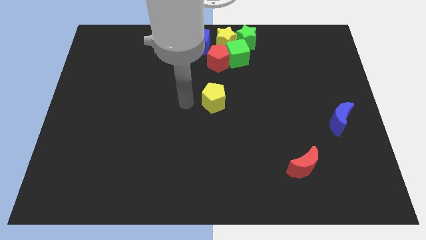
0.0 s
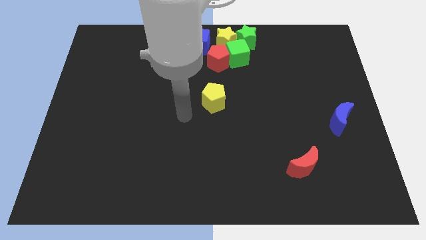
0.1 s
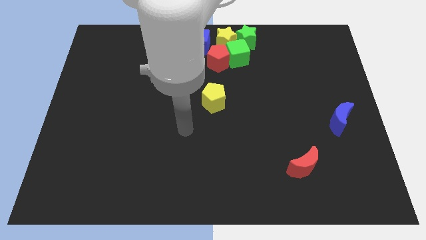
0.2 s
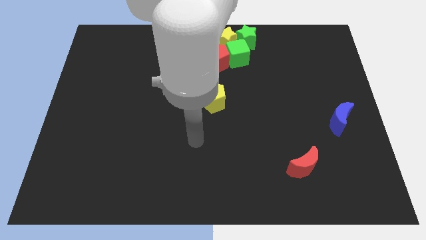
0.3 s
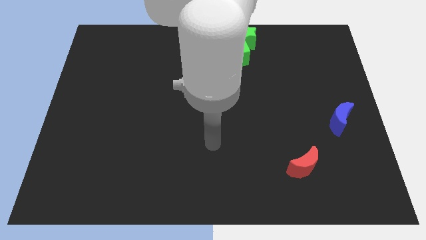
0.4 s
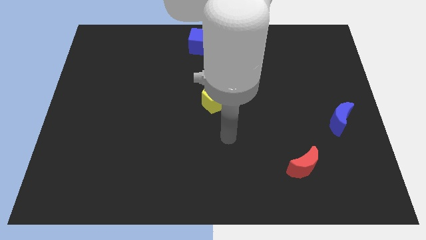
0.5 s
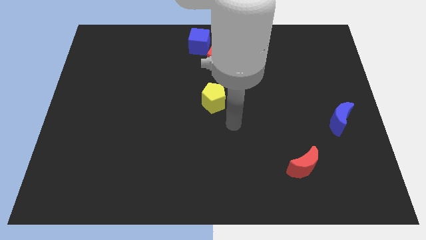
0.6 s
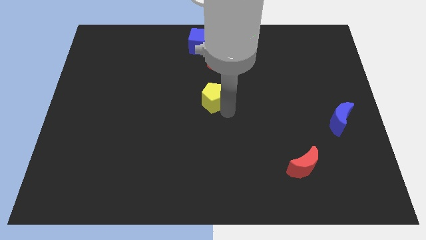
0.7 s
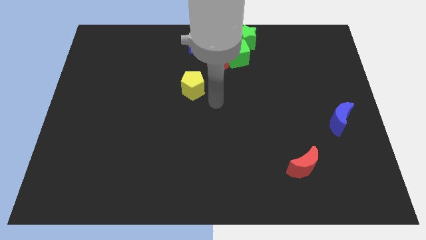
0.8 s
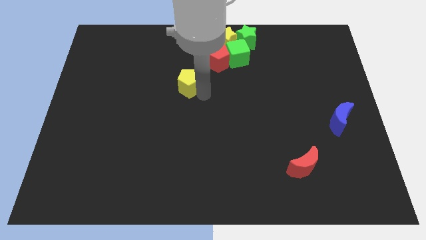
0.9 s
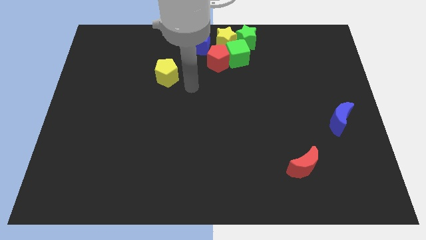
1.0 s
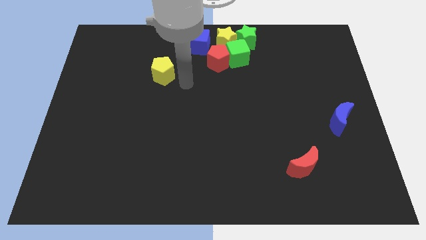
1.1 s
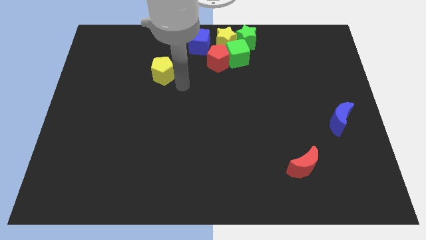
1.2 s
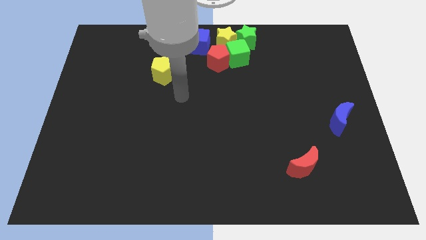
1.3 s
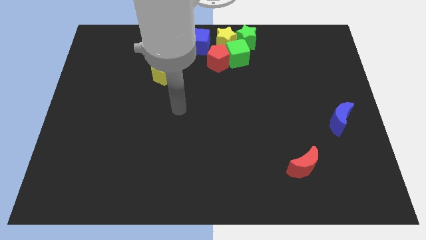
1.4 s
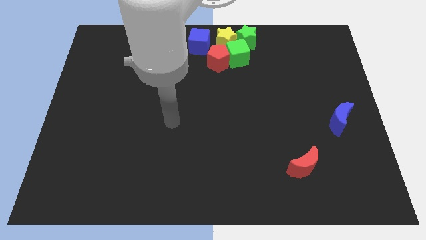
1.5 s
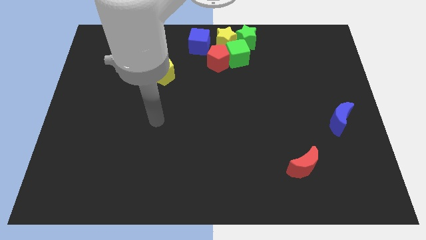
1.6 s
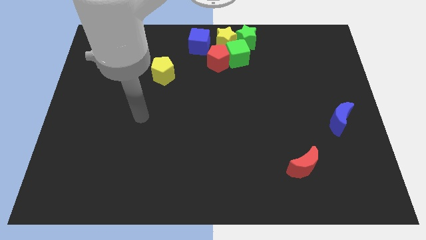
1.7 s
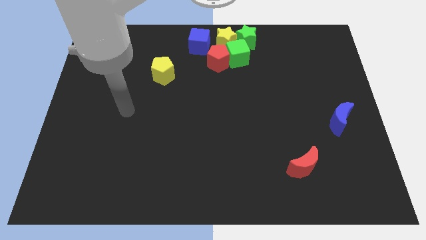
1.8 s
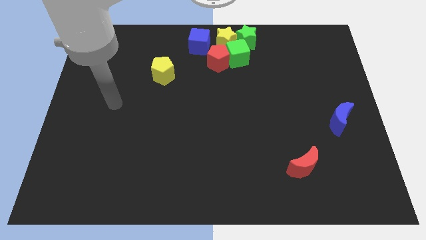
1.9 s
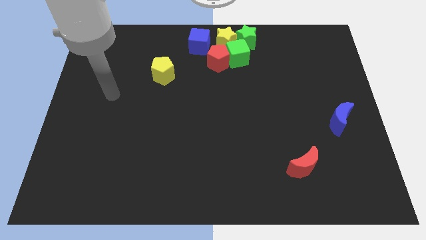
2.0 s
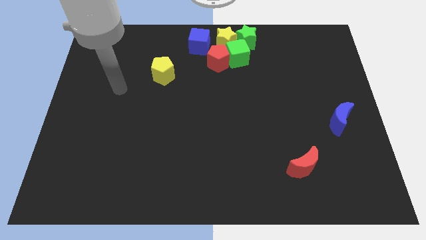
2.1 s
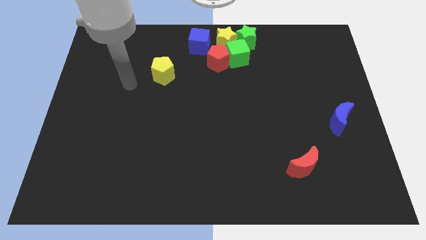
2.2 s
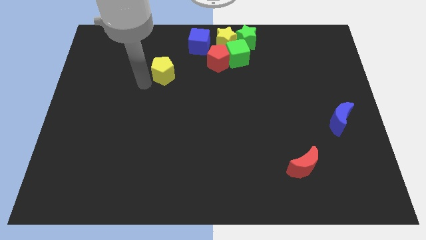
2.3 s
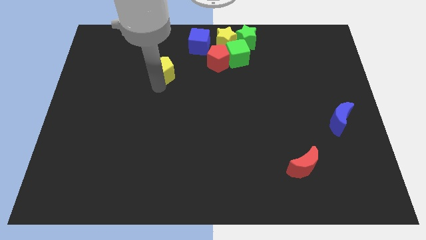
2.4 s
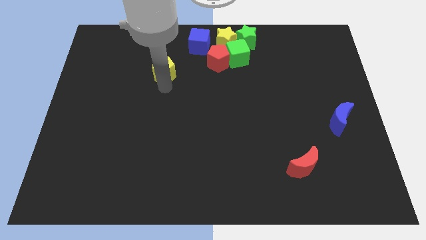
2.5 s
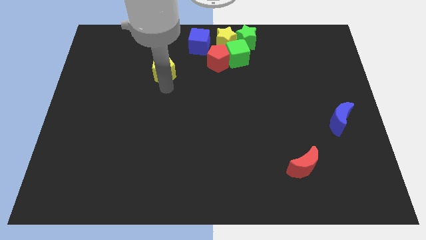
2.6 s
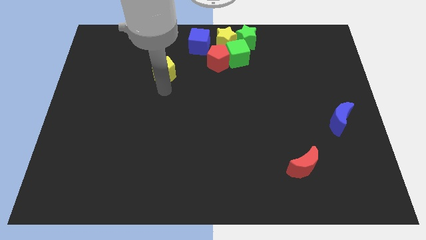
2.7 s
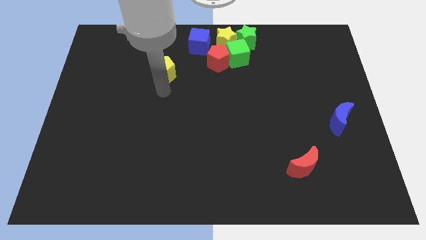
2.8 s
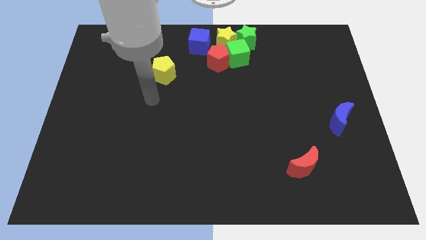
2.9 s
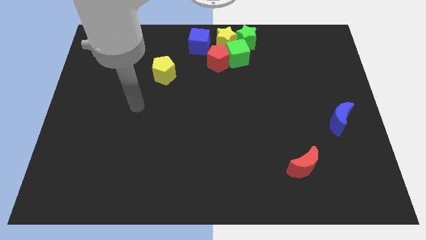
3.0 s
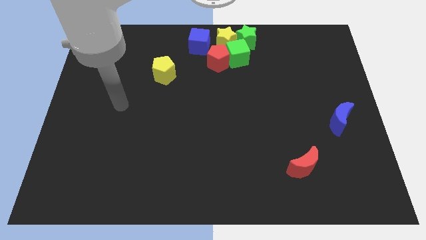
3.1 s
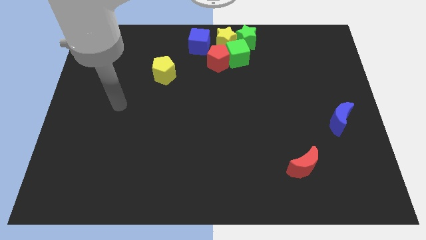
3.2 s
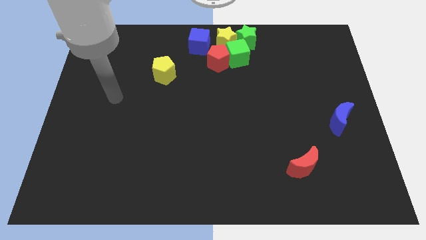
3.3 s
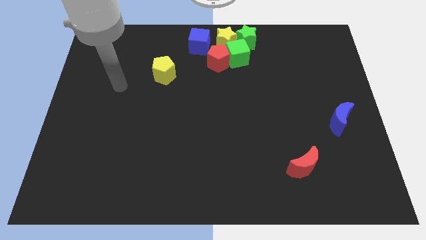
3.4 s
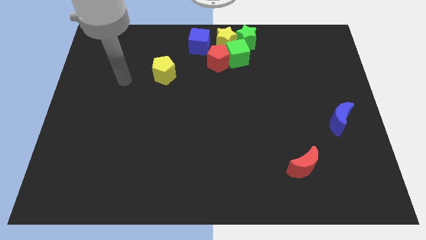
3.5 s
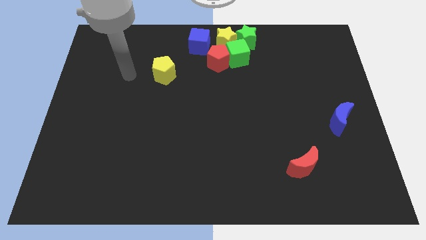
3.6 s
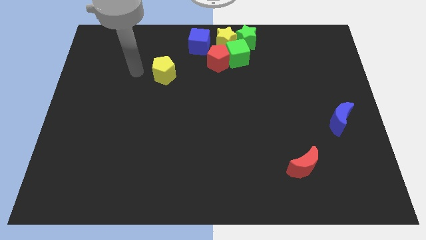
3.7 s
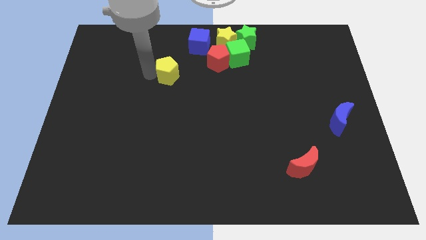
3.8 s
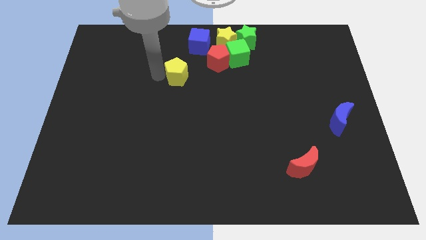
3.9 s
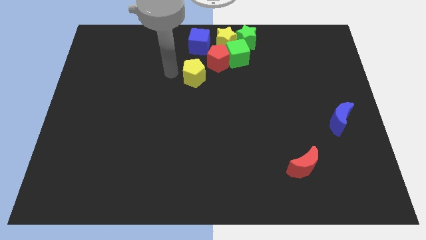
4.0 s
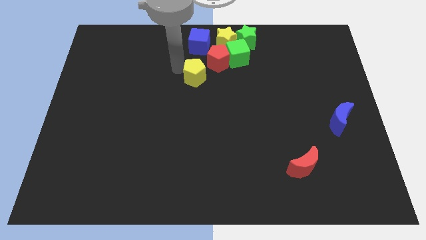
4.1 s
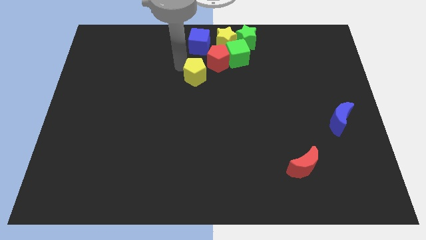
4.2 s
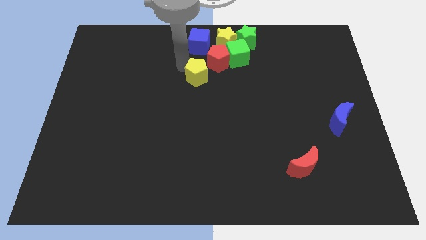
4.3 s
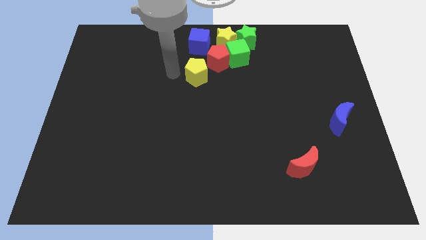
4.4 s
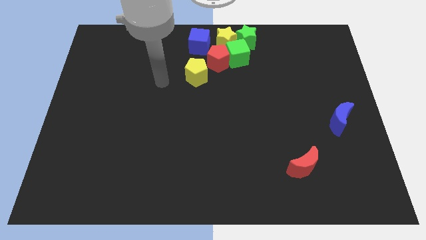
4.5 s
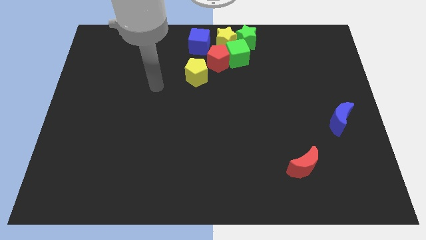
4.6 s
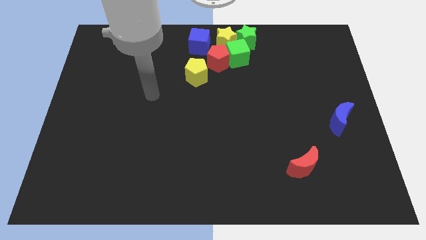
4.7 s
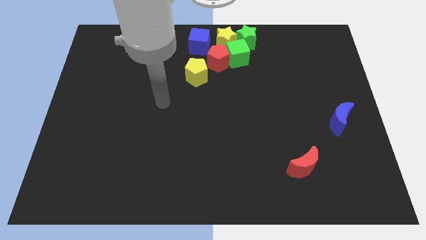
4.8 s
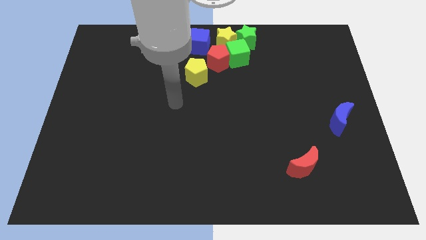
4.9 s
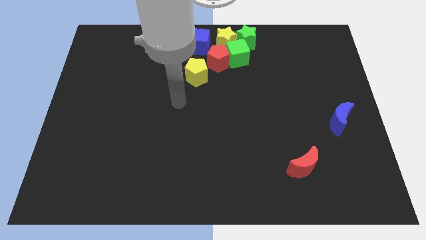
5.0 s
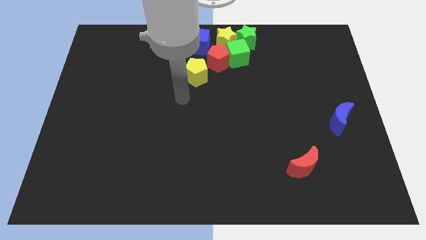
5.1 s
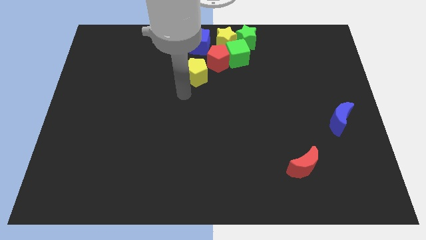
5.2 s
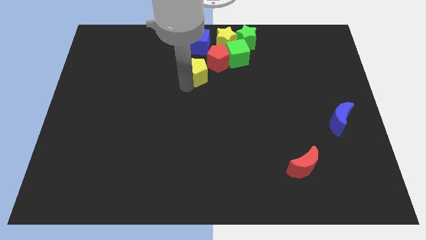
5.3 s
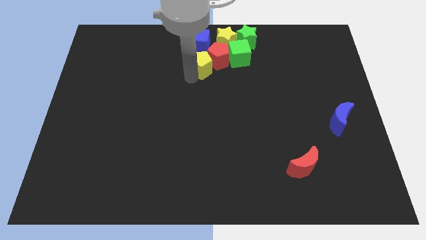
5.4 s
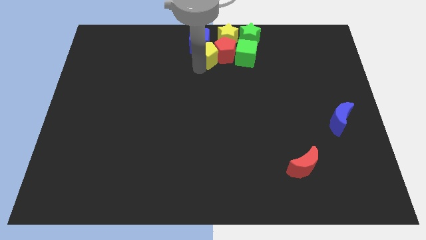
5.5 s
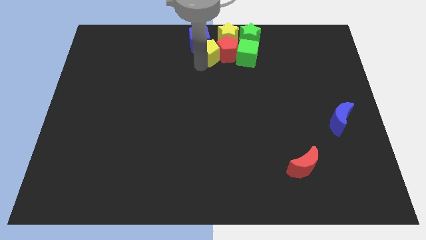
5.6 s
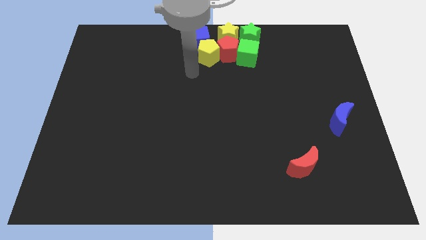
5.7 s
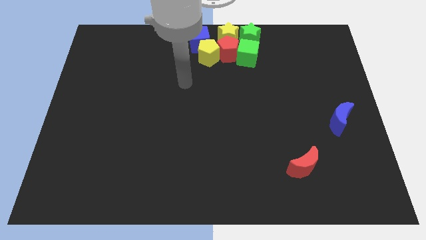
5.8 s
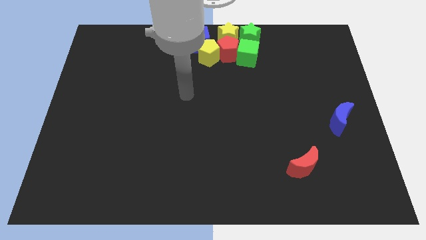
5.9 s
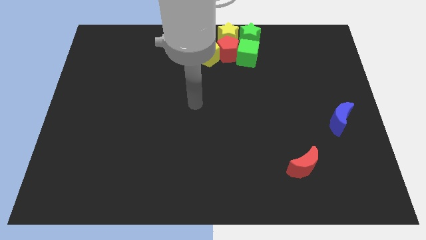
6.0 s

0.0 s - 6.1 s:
move yellow pentagon into the bottom of the blue cube

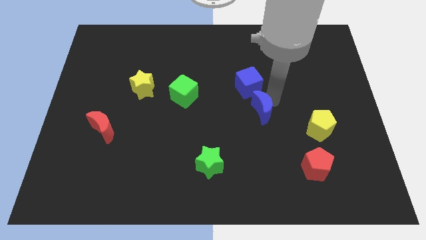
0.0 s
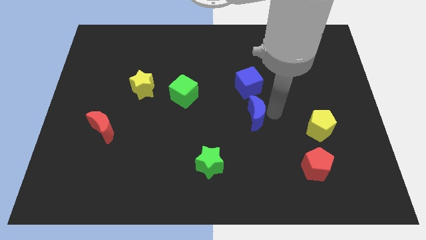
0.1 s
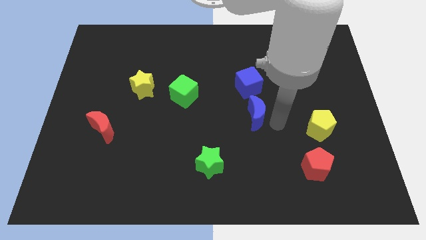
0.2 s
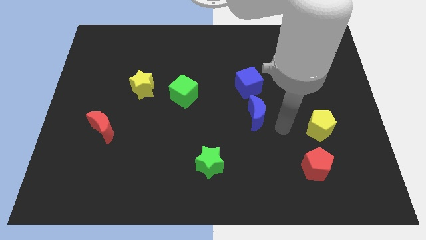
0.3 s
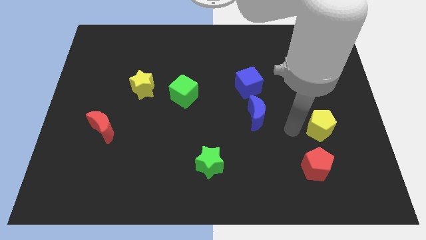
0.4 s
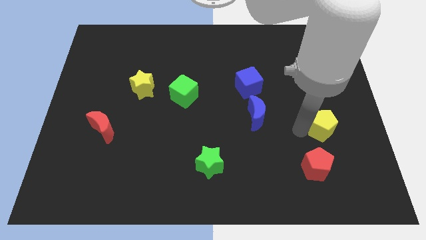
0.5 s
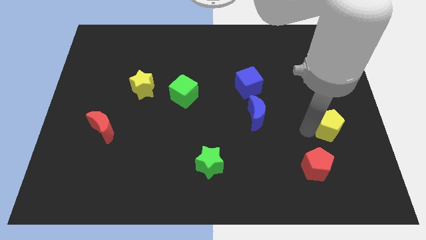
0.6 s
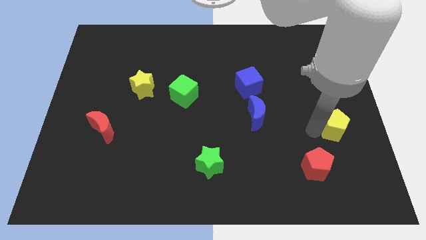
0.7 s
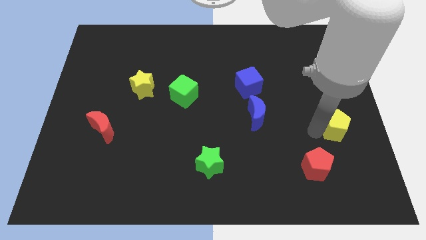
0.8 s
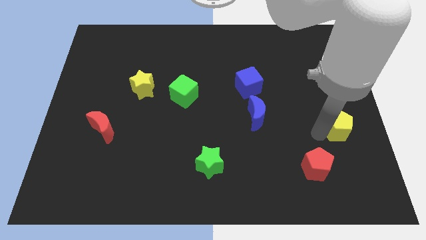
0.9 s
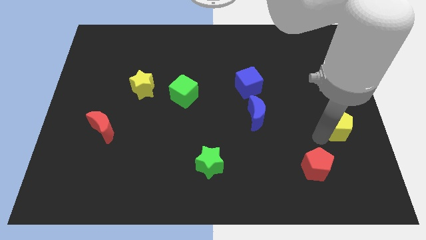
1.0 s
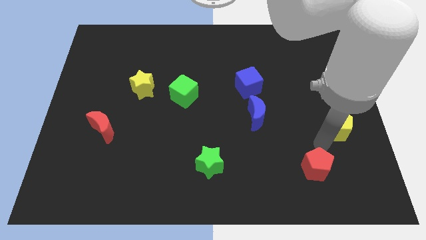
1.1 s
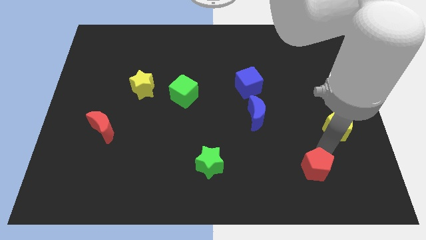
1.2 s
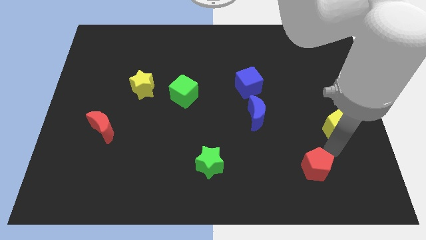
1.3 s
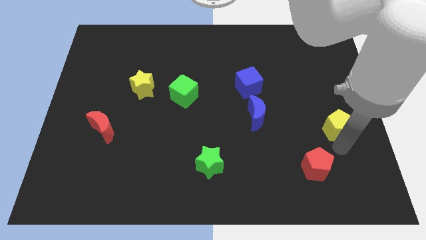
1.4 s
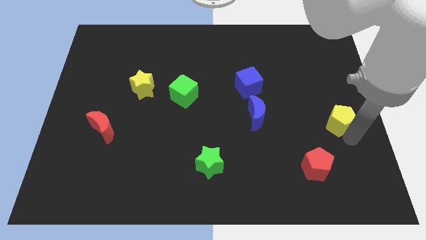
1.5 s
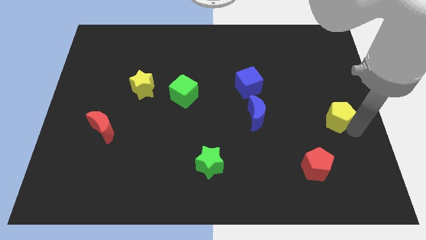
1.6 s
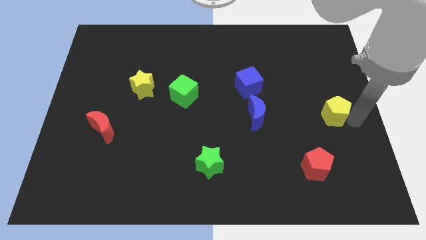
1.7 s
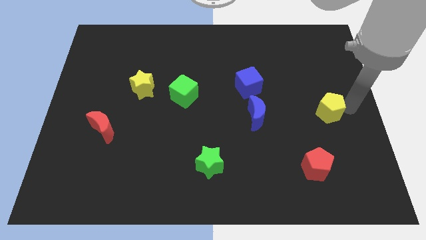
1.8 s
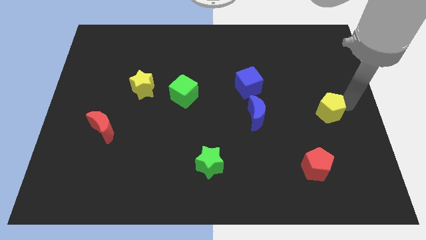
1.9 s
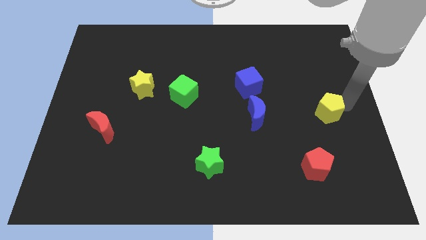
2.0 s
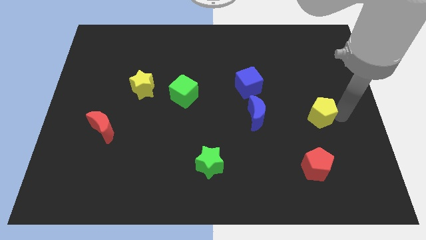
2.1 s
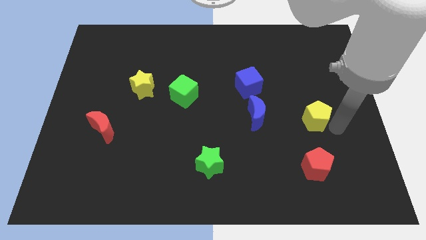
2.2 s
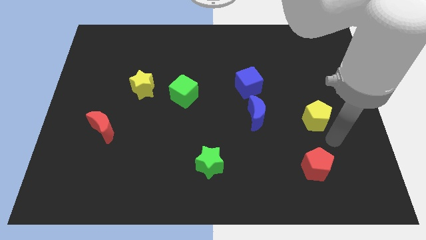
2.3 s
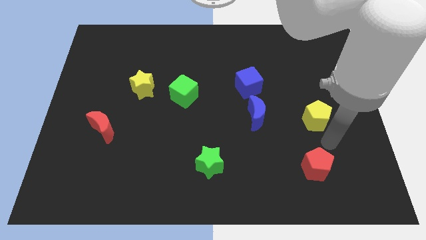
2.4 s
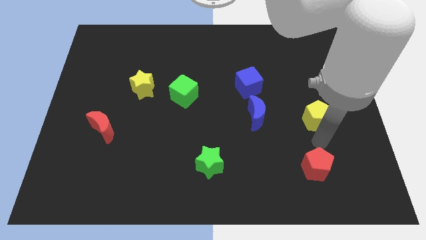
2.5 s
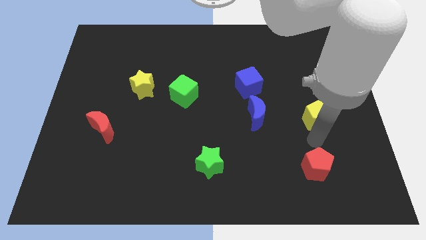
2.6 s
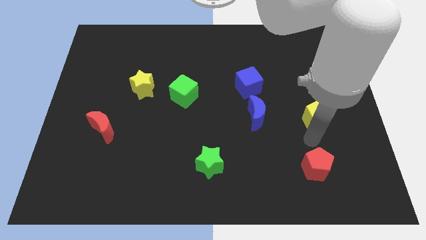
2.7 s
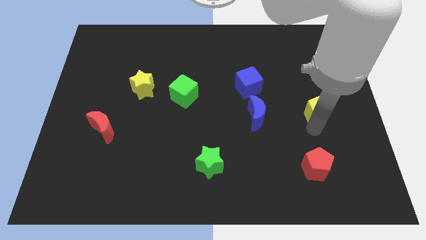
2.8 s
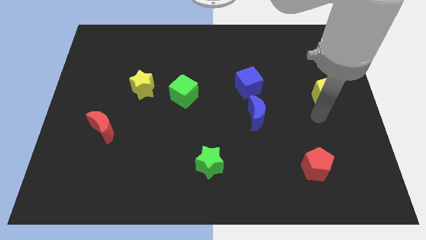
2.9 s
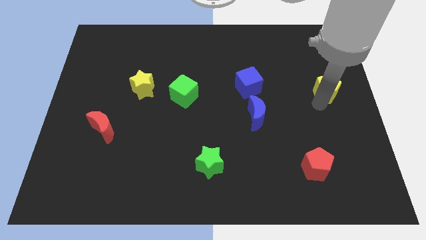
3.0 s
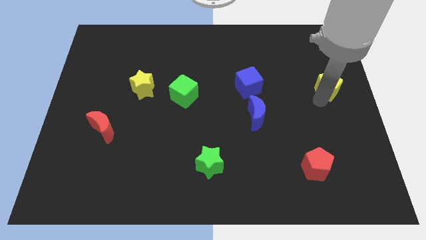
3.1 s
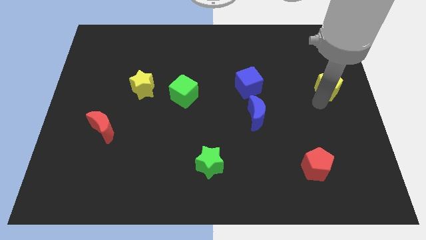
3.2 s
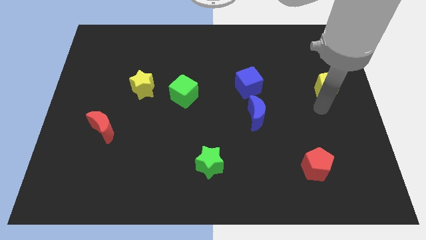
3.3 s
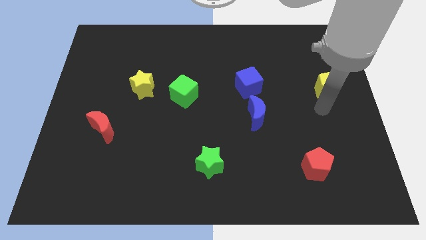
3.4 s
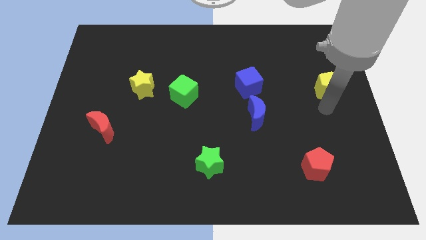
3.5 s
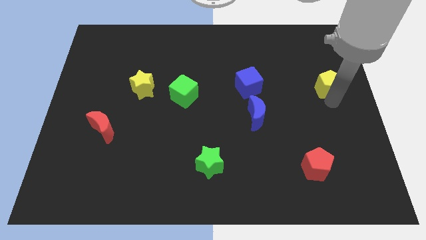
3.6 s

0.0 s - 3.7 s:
push the blue moon and yellow pentagon in a diagonal line
